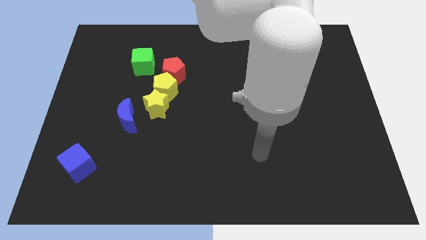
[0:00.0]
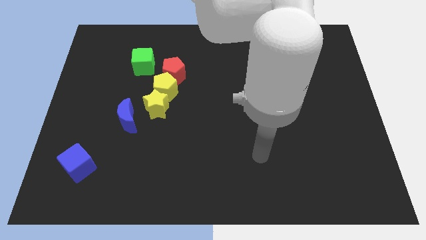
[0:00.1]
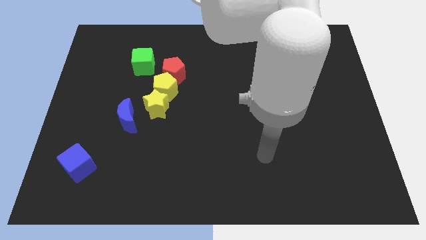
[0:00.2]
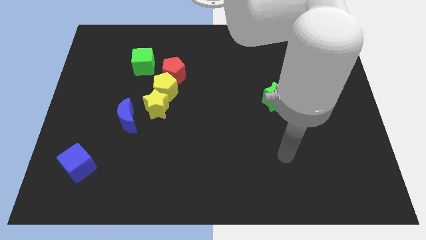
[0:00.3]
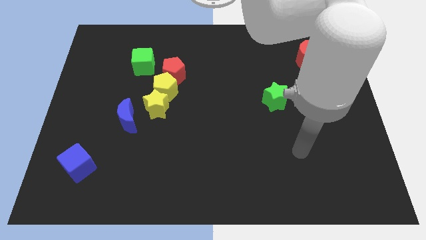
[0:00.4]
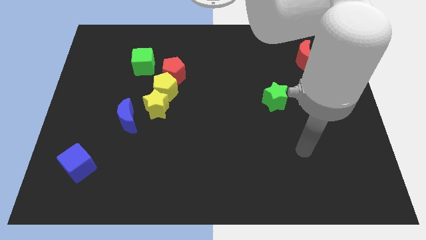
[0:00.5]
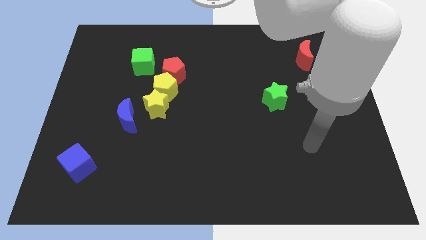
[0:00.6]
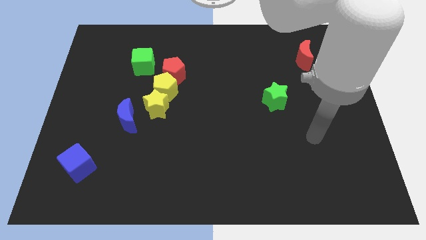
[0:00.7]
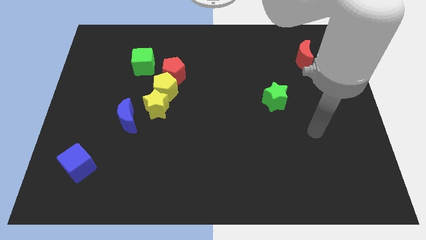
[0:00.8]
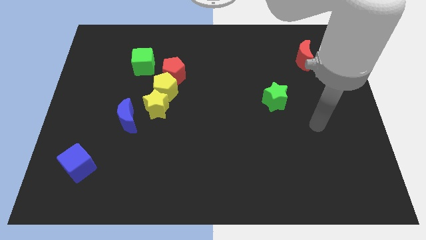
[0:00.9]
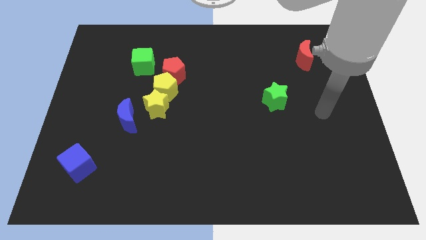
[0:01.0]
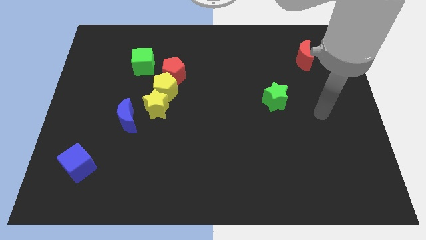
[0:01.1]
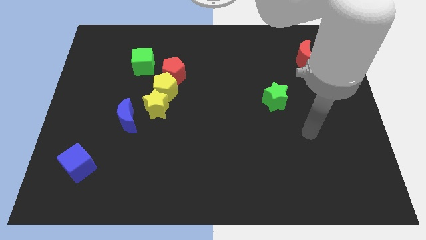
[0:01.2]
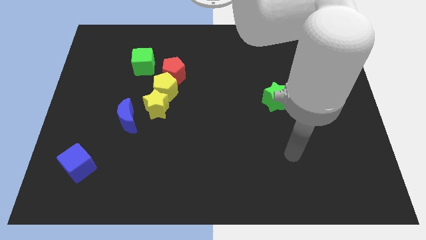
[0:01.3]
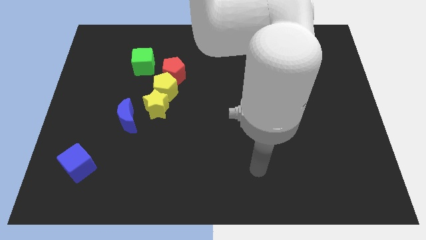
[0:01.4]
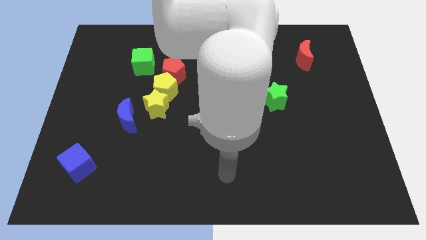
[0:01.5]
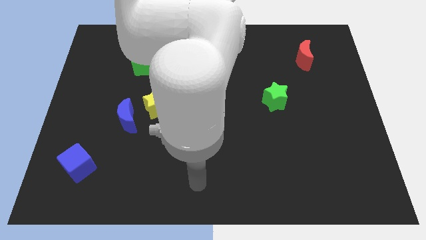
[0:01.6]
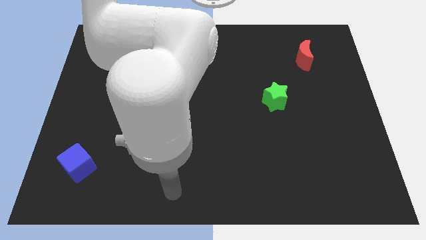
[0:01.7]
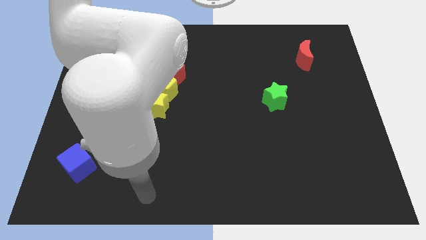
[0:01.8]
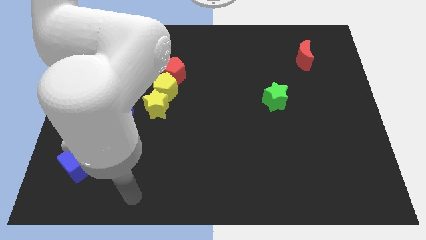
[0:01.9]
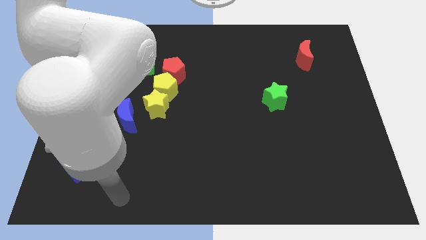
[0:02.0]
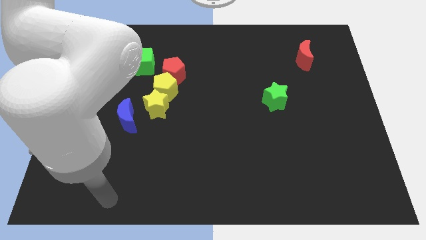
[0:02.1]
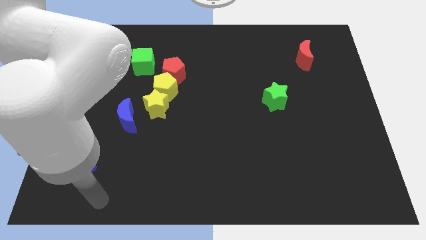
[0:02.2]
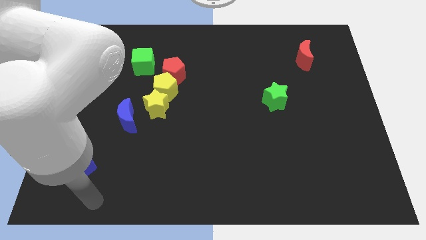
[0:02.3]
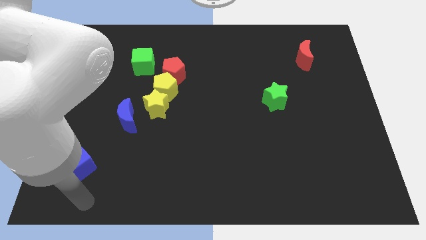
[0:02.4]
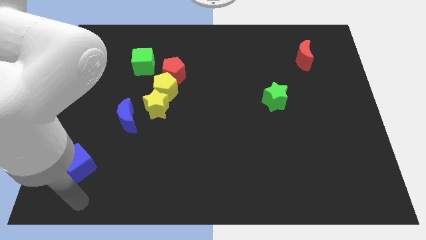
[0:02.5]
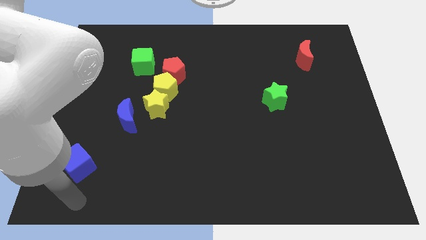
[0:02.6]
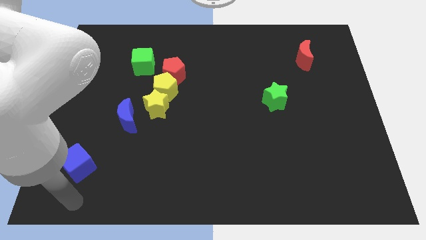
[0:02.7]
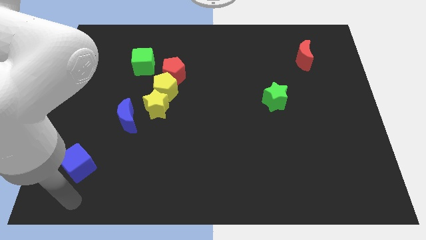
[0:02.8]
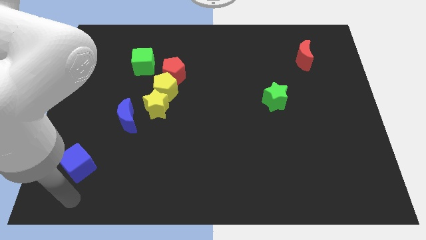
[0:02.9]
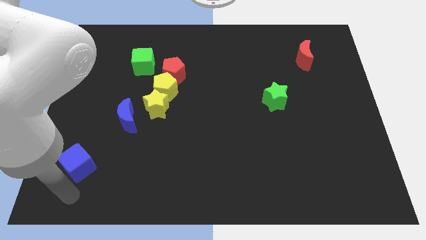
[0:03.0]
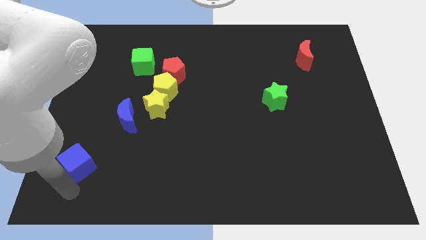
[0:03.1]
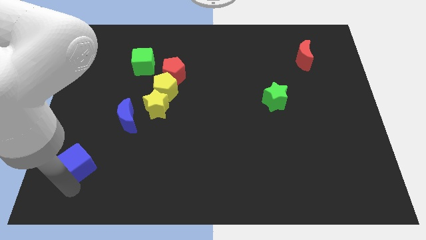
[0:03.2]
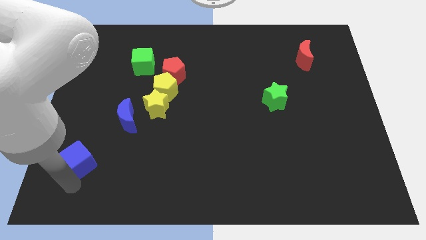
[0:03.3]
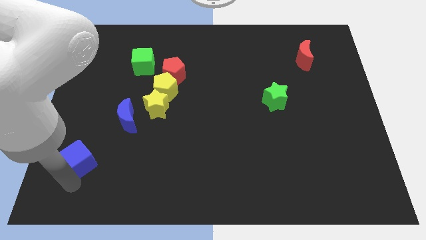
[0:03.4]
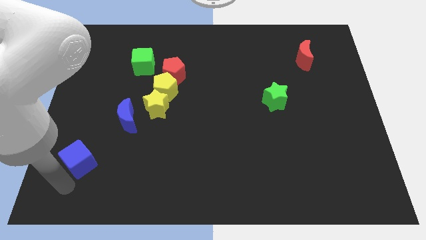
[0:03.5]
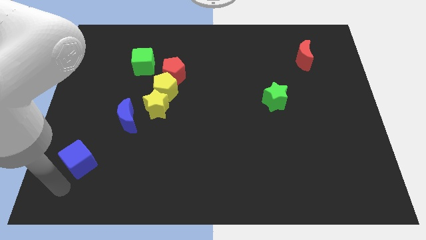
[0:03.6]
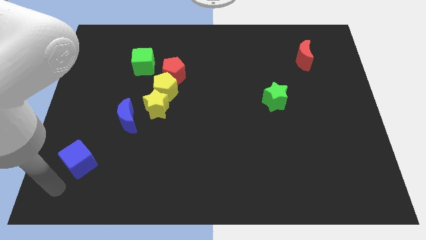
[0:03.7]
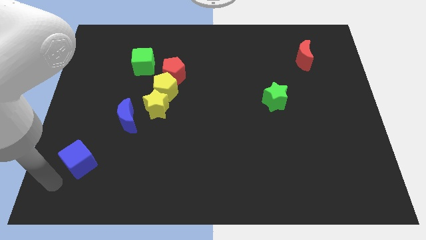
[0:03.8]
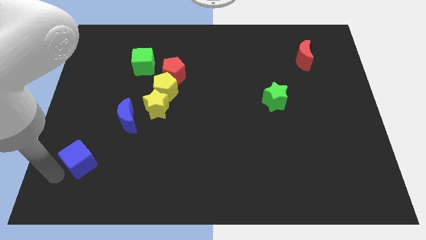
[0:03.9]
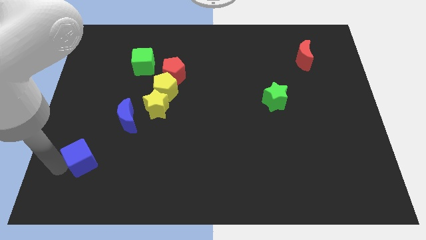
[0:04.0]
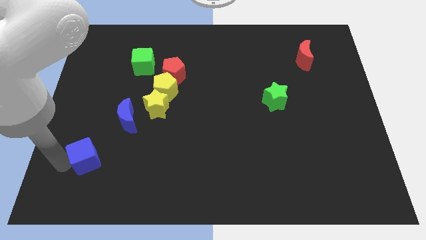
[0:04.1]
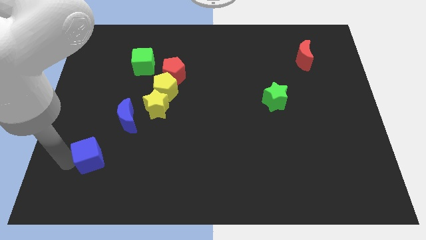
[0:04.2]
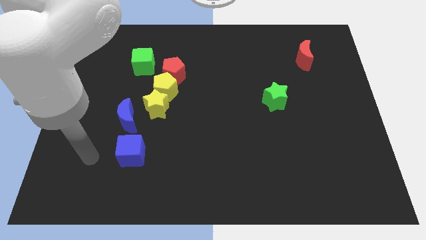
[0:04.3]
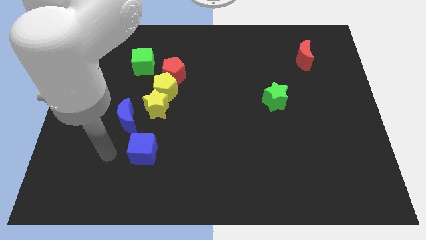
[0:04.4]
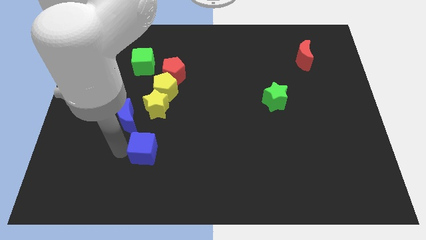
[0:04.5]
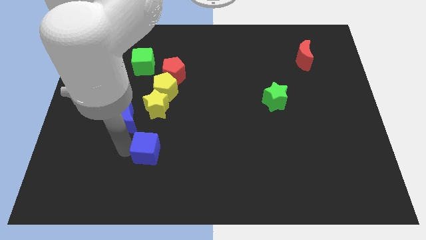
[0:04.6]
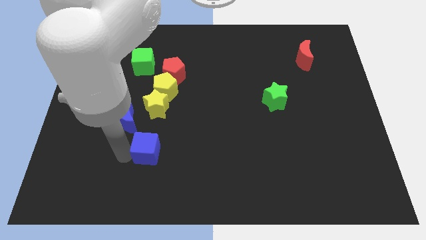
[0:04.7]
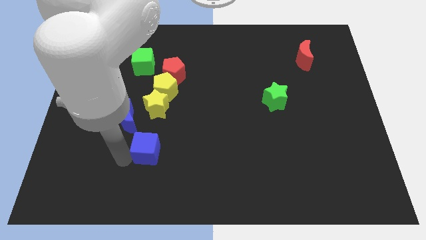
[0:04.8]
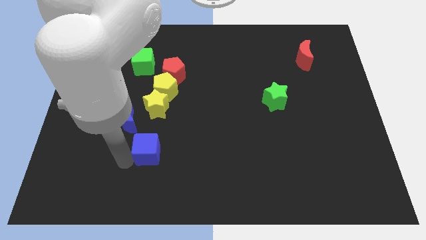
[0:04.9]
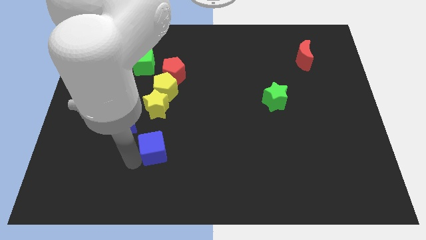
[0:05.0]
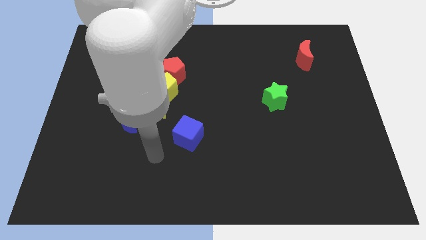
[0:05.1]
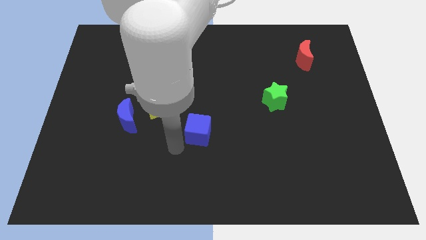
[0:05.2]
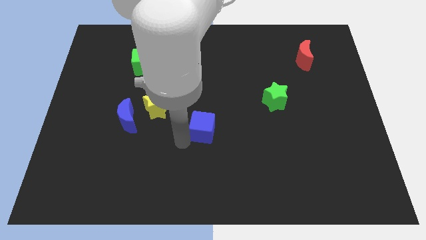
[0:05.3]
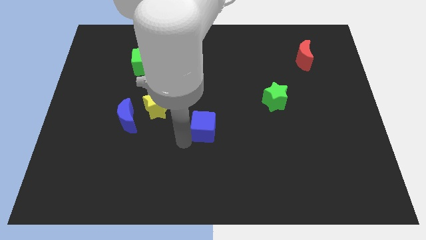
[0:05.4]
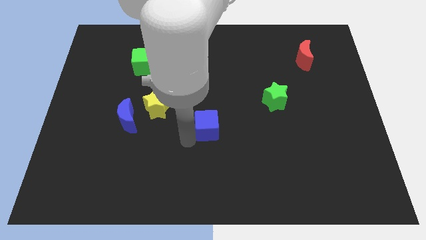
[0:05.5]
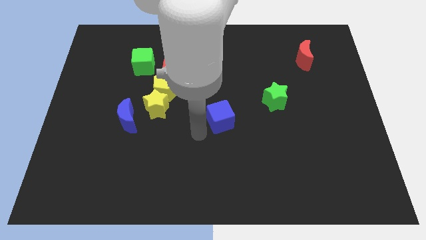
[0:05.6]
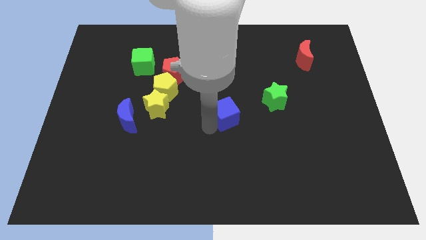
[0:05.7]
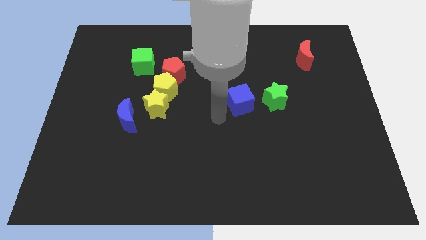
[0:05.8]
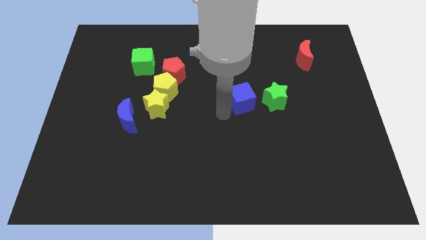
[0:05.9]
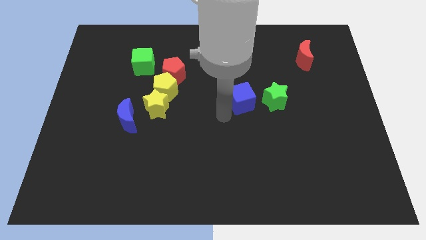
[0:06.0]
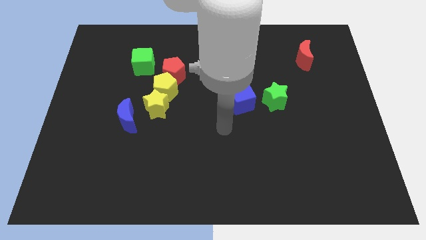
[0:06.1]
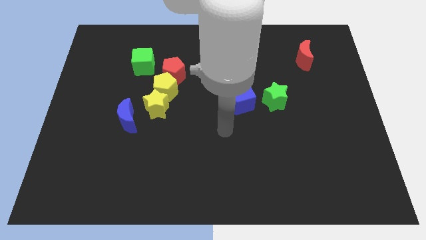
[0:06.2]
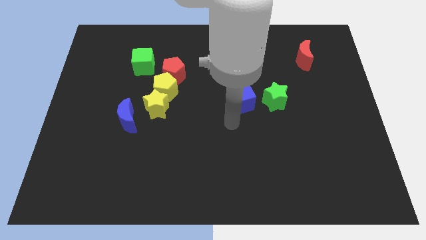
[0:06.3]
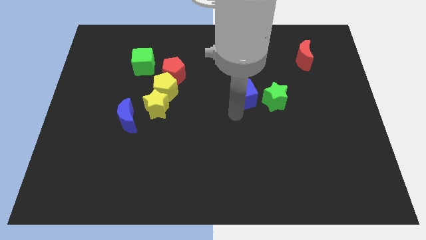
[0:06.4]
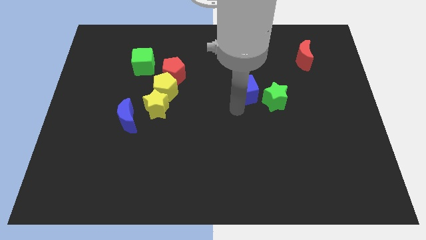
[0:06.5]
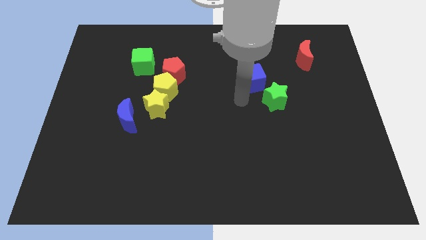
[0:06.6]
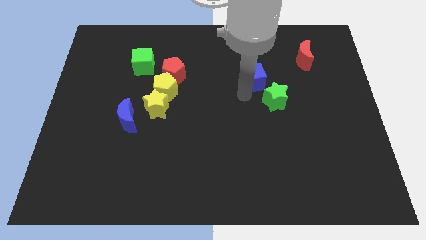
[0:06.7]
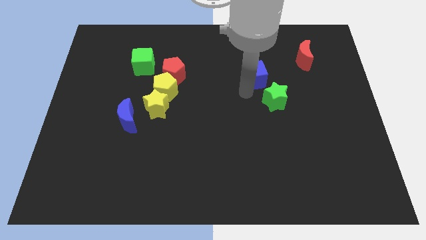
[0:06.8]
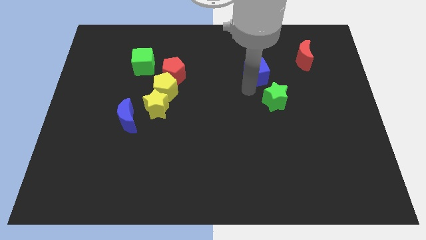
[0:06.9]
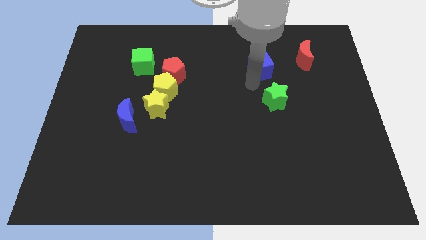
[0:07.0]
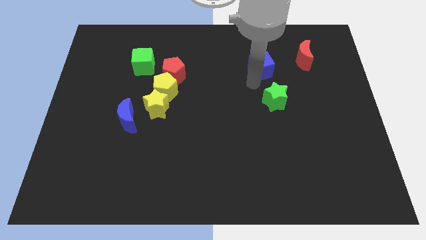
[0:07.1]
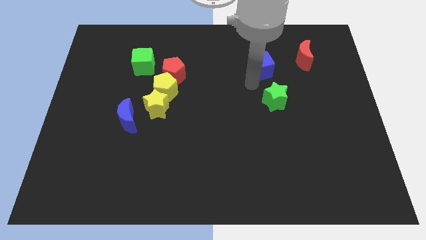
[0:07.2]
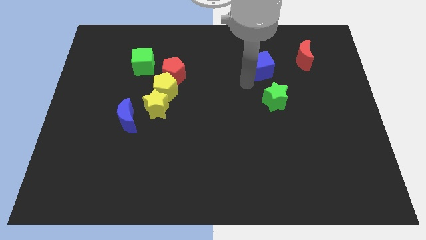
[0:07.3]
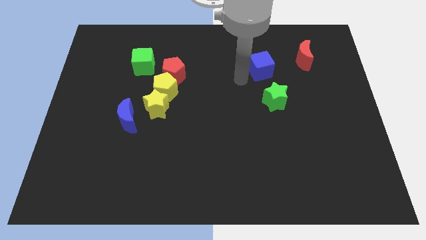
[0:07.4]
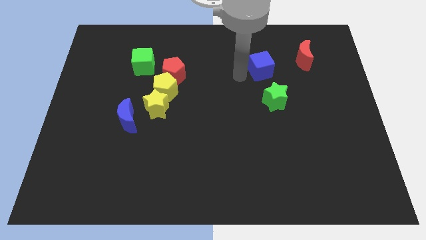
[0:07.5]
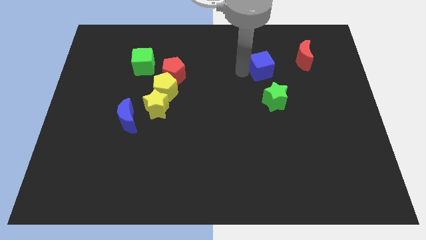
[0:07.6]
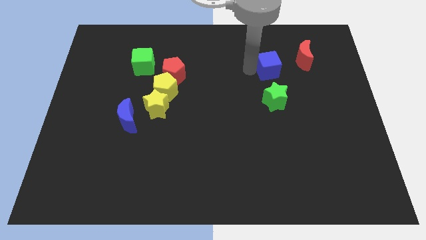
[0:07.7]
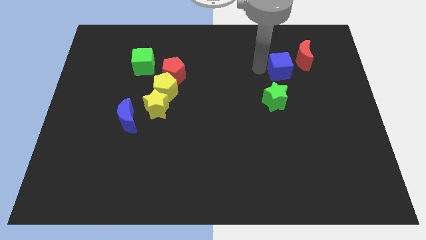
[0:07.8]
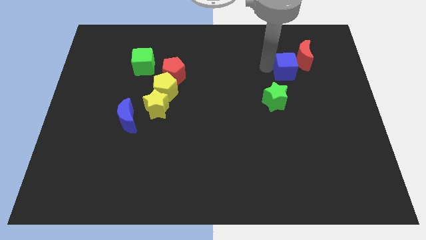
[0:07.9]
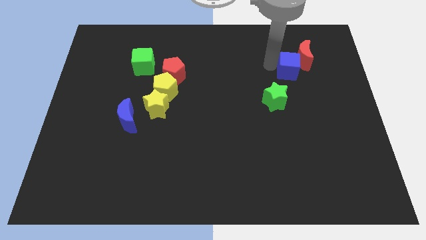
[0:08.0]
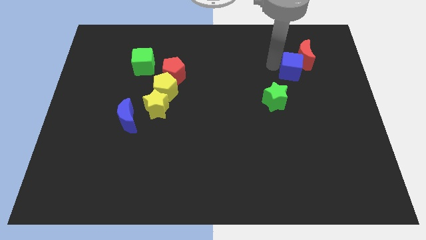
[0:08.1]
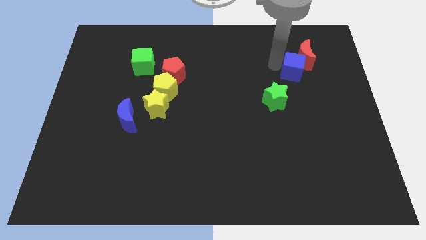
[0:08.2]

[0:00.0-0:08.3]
push the blue cube next to the red moon
